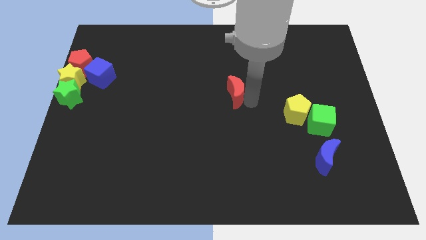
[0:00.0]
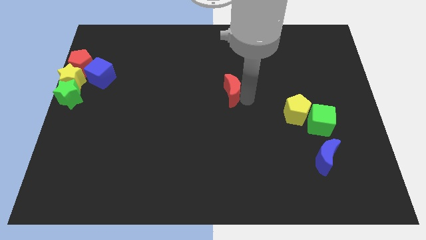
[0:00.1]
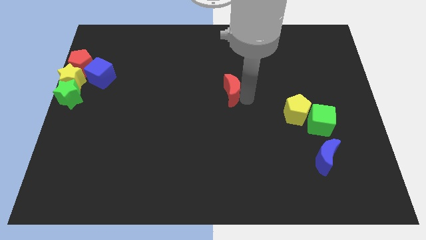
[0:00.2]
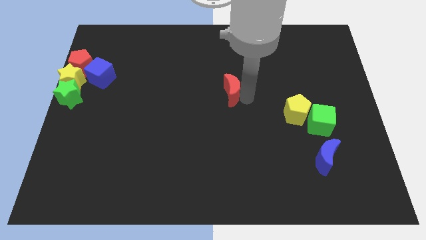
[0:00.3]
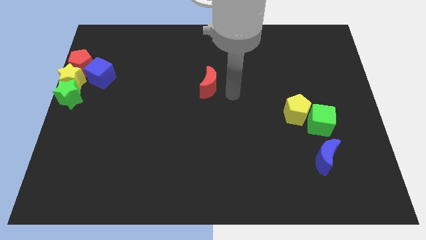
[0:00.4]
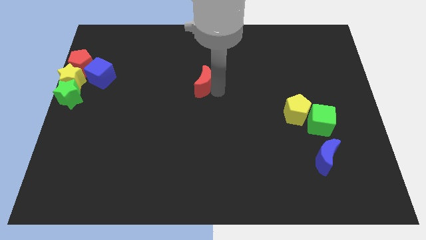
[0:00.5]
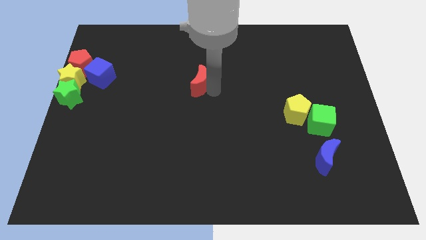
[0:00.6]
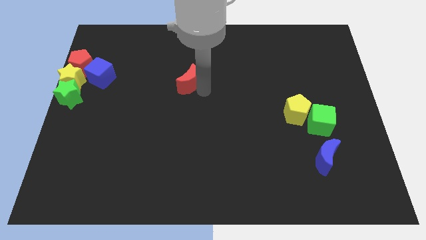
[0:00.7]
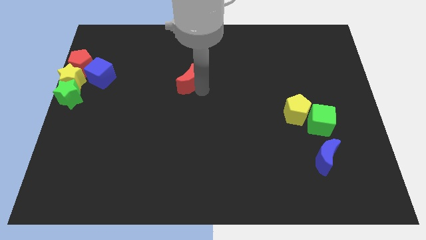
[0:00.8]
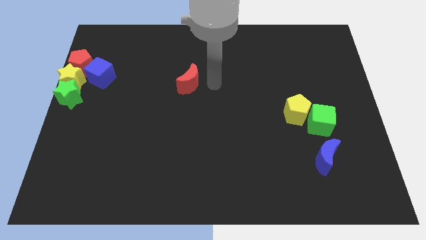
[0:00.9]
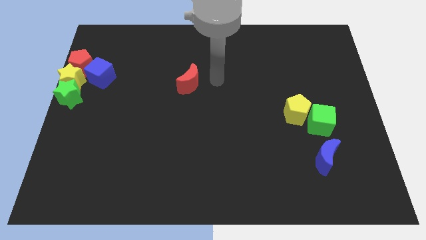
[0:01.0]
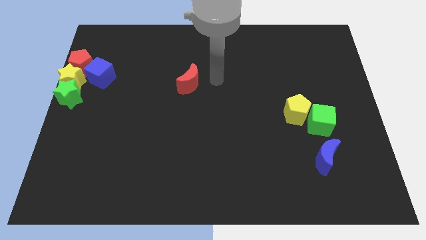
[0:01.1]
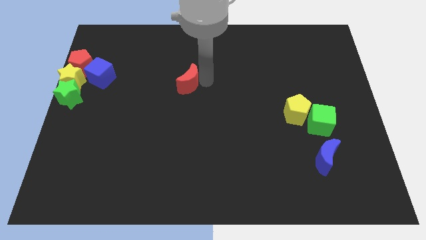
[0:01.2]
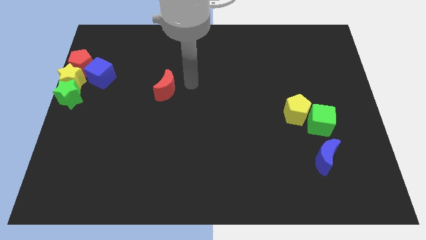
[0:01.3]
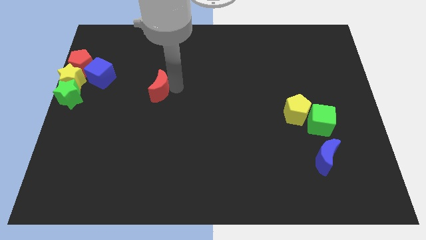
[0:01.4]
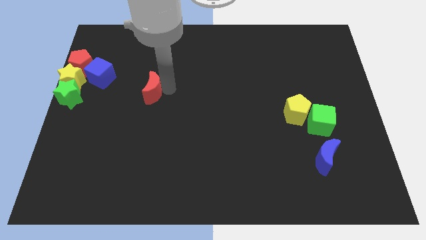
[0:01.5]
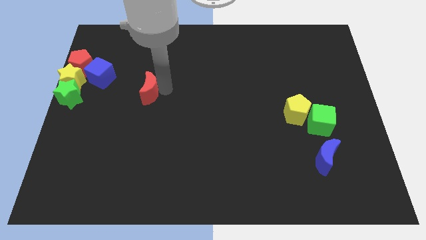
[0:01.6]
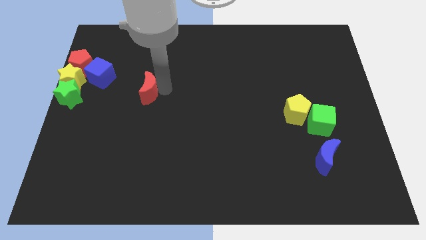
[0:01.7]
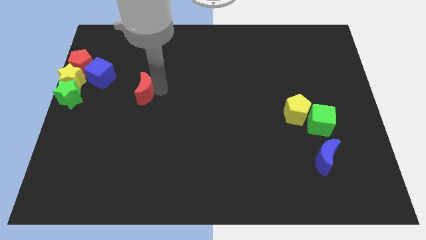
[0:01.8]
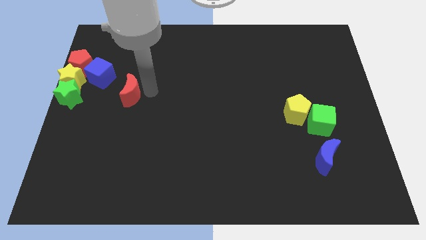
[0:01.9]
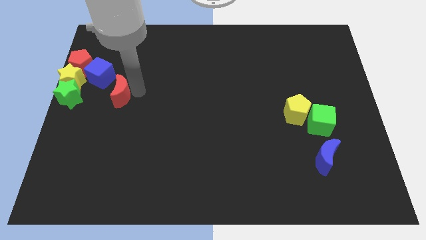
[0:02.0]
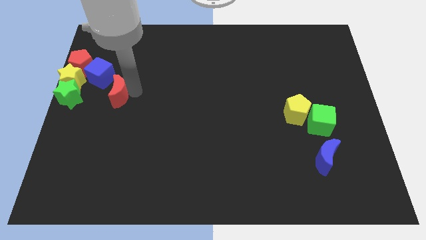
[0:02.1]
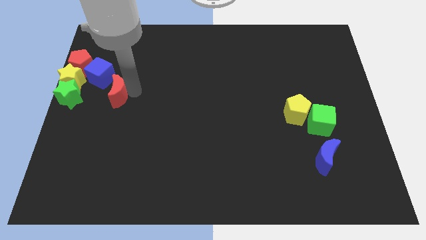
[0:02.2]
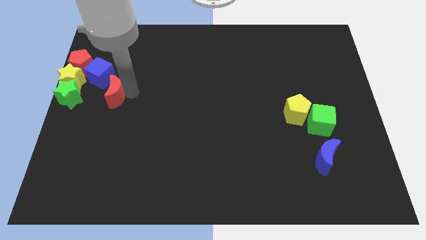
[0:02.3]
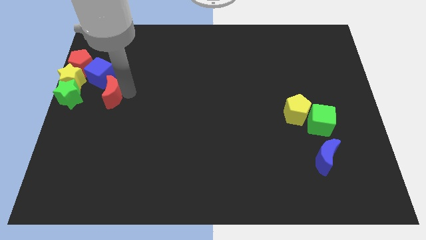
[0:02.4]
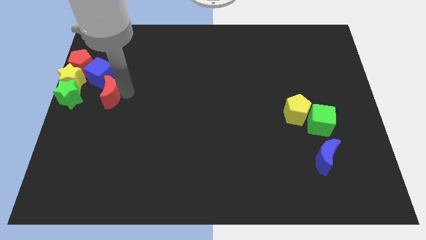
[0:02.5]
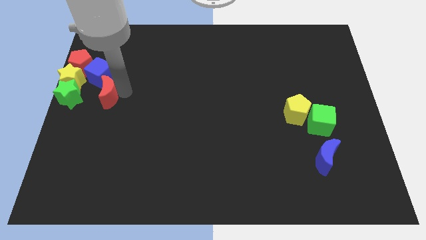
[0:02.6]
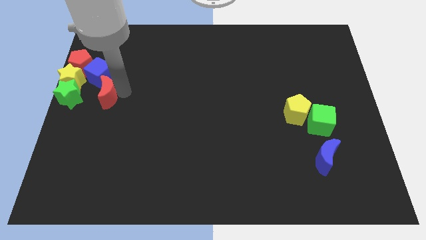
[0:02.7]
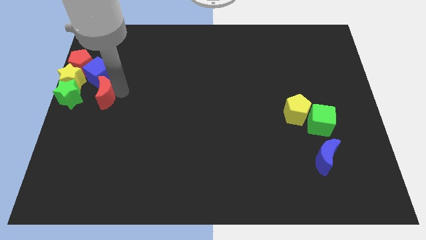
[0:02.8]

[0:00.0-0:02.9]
place the red moon parallel to green star

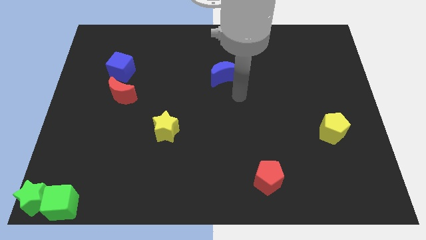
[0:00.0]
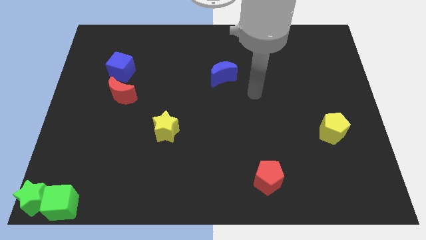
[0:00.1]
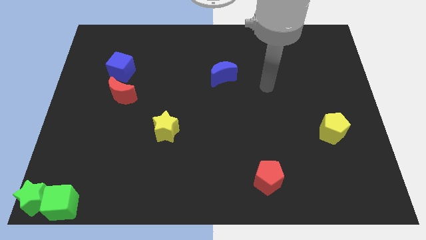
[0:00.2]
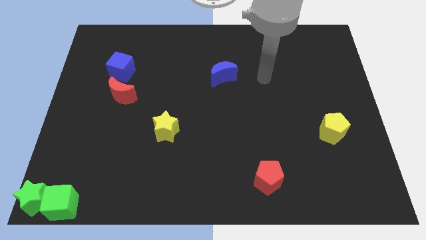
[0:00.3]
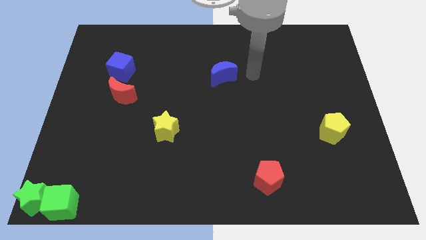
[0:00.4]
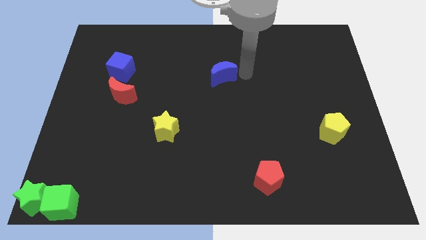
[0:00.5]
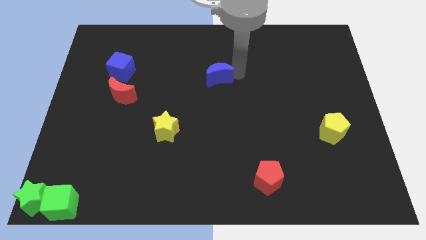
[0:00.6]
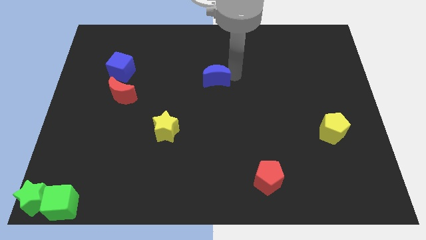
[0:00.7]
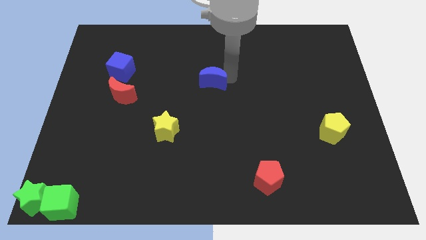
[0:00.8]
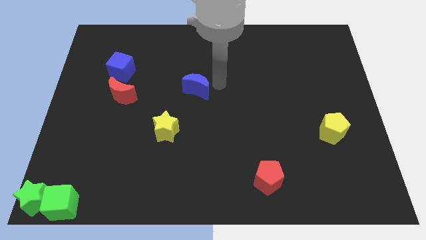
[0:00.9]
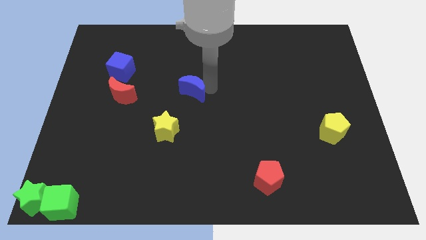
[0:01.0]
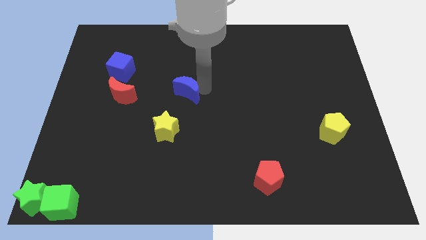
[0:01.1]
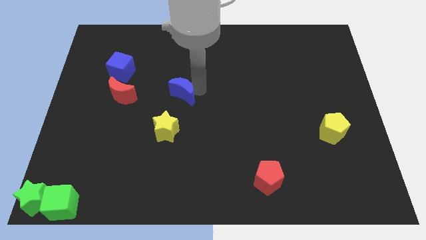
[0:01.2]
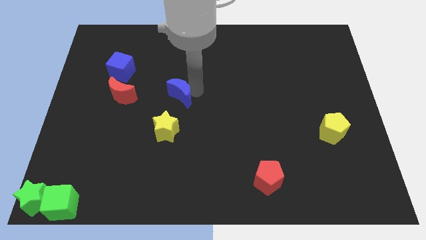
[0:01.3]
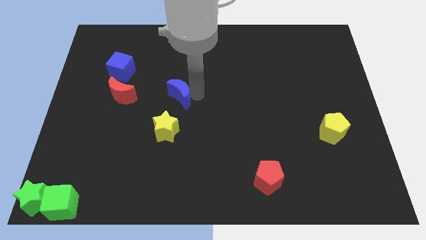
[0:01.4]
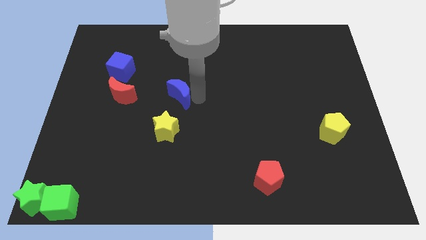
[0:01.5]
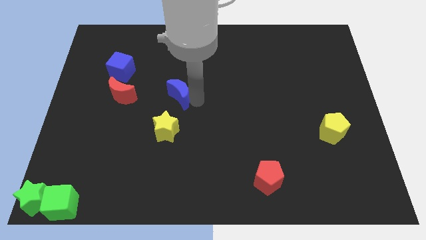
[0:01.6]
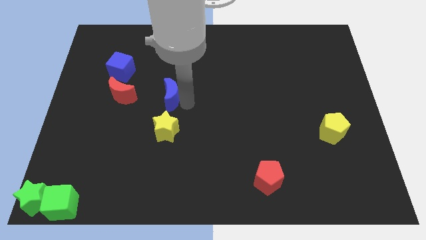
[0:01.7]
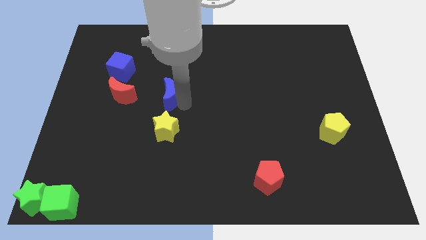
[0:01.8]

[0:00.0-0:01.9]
place the blue moon above the yellow star

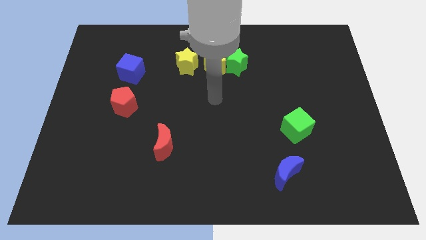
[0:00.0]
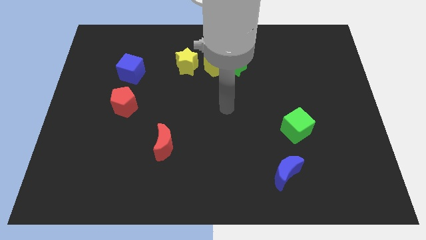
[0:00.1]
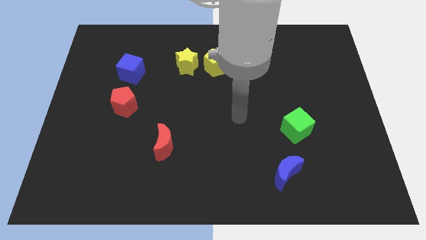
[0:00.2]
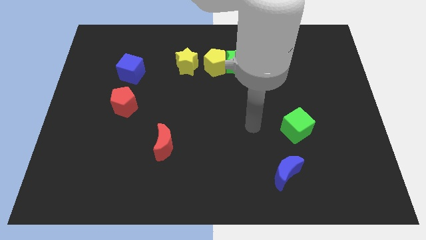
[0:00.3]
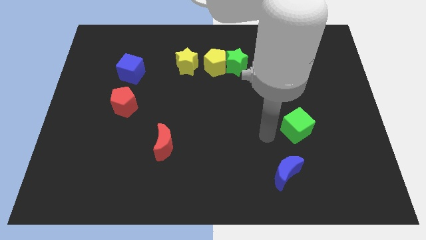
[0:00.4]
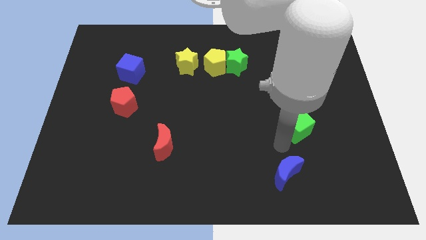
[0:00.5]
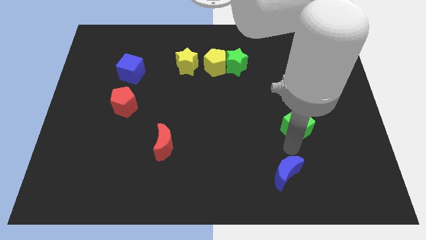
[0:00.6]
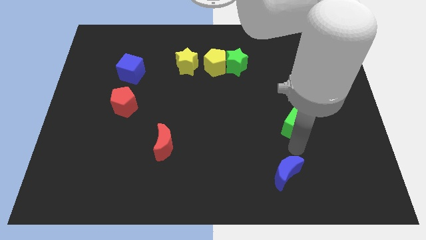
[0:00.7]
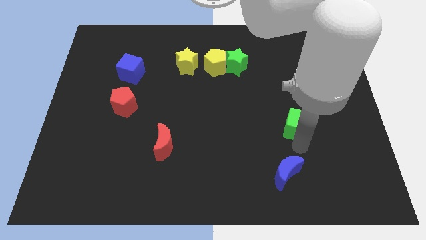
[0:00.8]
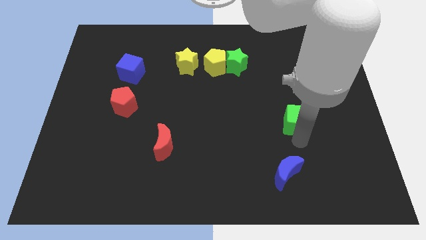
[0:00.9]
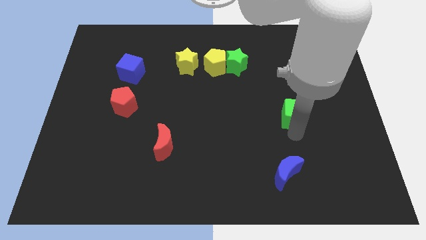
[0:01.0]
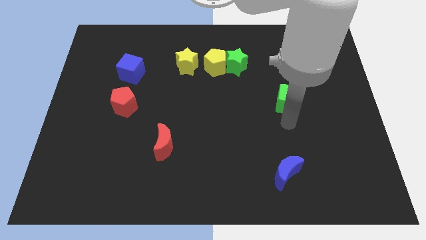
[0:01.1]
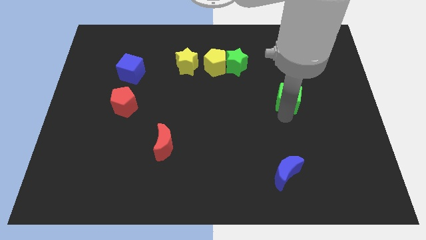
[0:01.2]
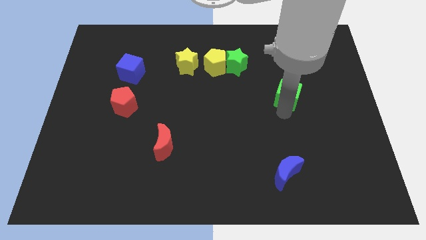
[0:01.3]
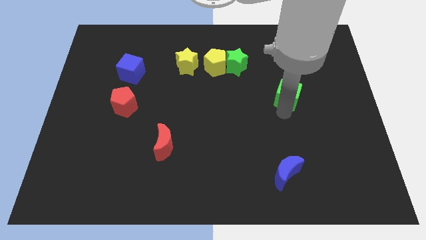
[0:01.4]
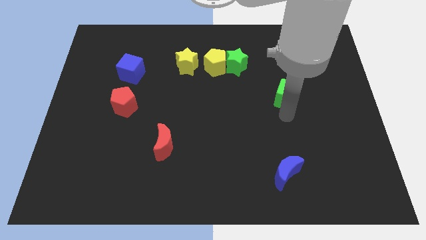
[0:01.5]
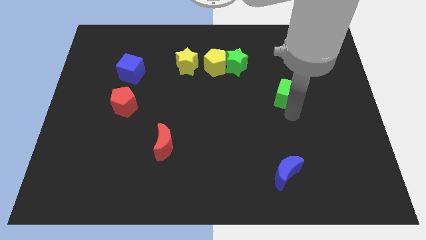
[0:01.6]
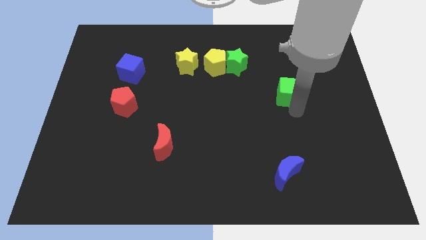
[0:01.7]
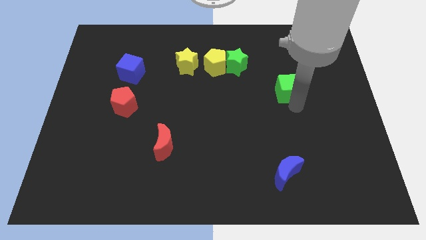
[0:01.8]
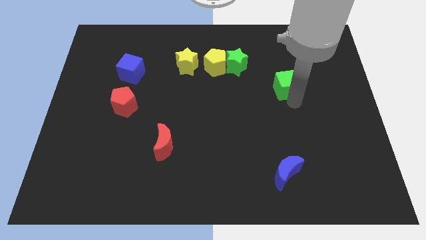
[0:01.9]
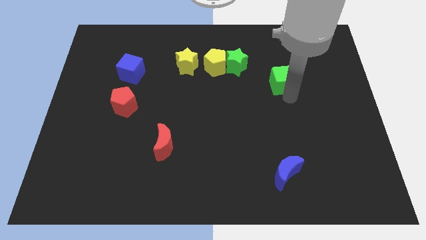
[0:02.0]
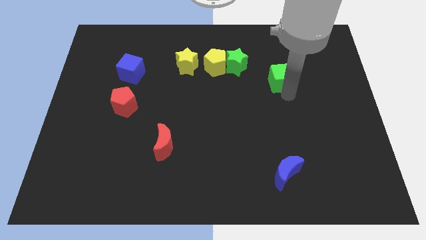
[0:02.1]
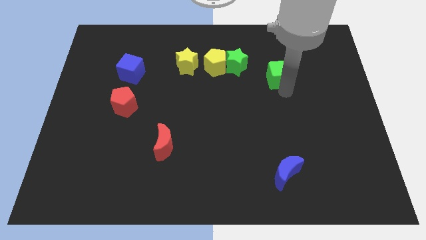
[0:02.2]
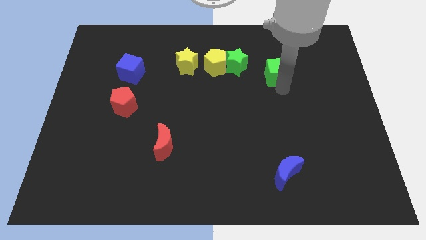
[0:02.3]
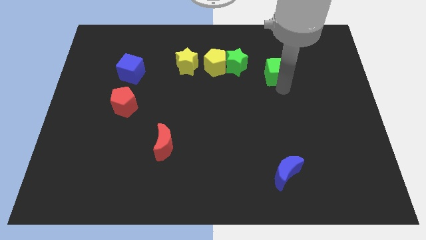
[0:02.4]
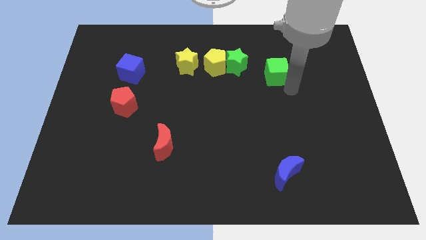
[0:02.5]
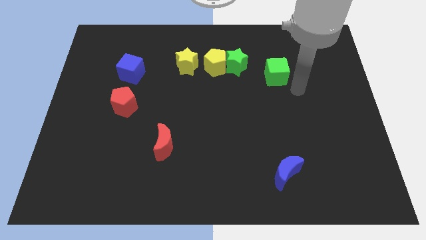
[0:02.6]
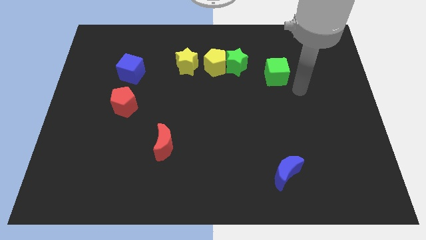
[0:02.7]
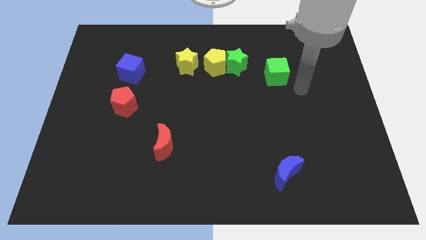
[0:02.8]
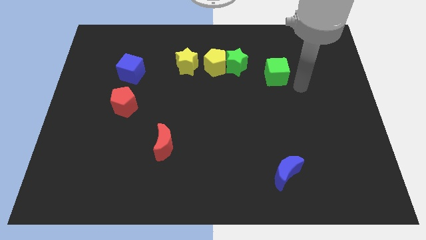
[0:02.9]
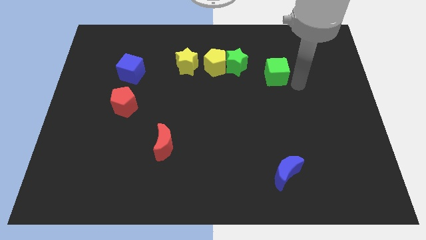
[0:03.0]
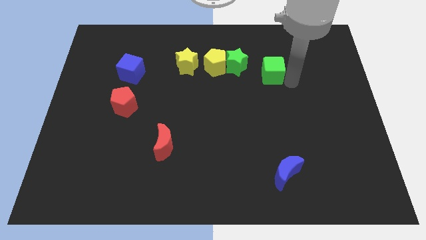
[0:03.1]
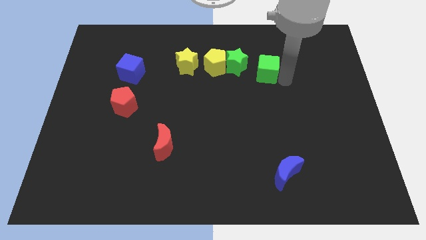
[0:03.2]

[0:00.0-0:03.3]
place green cube vertically above blue crescent

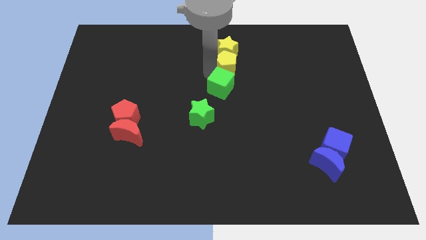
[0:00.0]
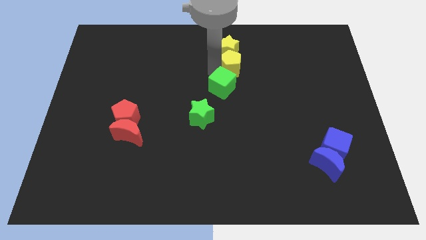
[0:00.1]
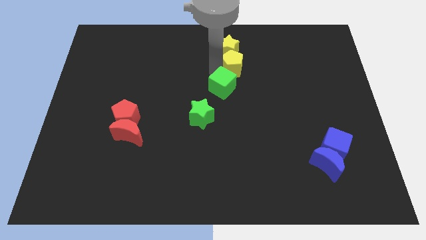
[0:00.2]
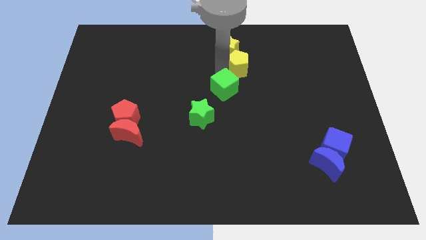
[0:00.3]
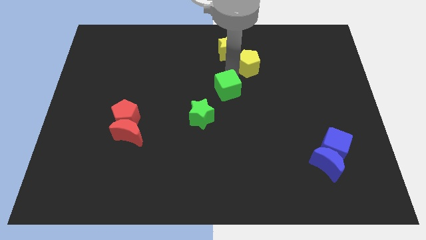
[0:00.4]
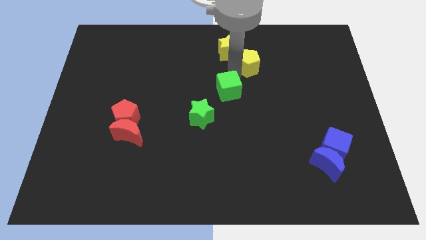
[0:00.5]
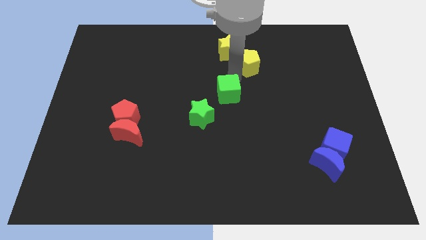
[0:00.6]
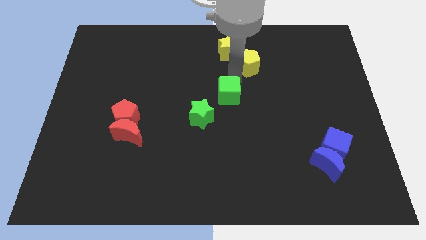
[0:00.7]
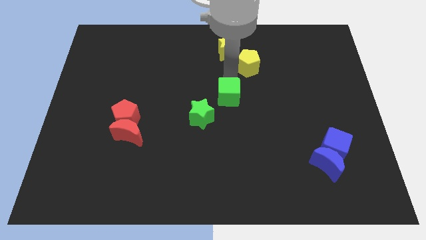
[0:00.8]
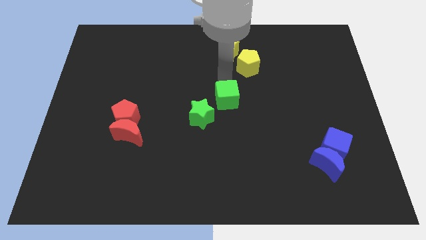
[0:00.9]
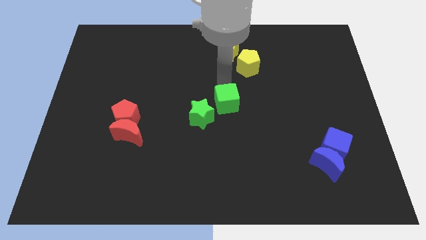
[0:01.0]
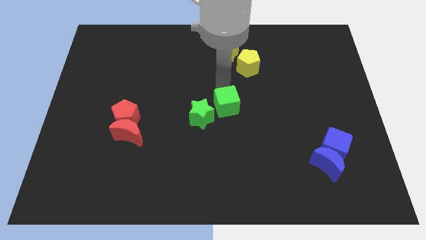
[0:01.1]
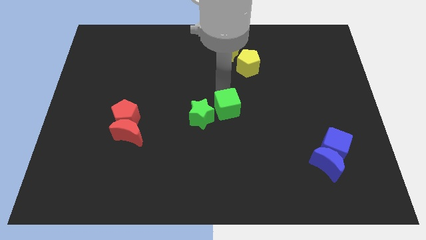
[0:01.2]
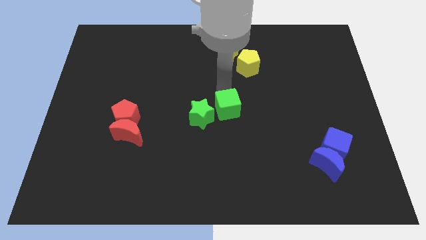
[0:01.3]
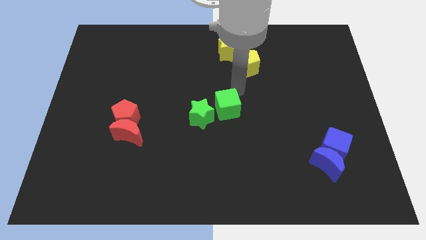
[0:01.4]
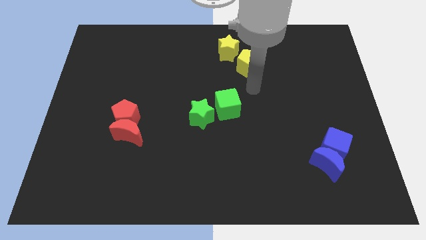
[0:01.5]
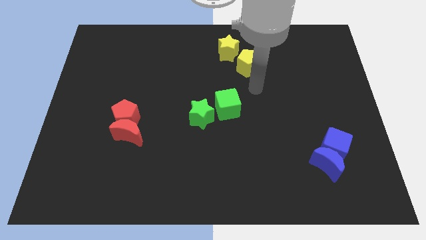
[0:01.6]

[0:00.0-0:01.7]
separate green cube from the yellow pentagon
